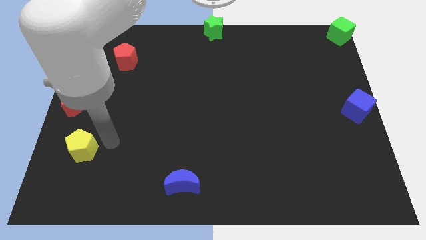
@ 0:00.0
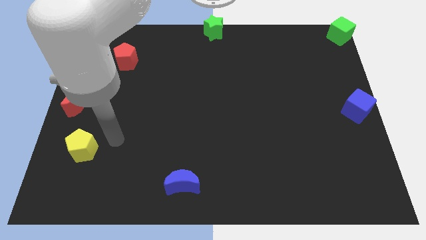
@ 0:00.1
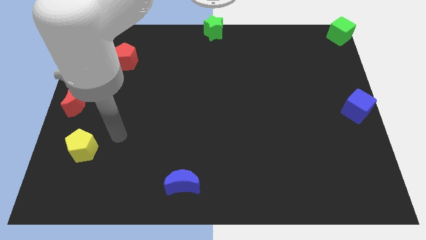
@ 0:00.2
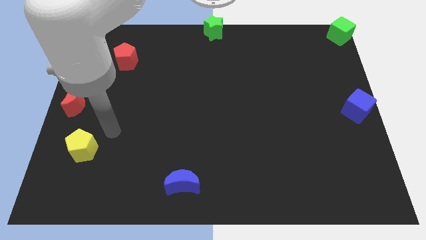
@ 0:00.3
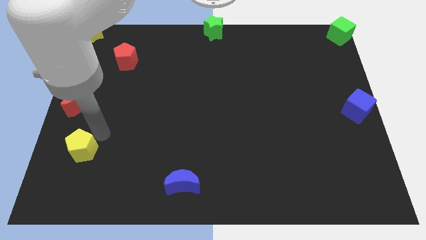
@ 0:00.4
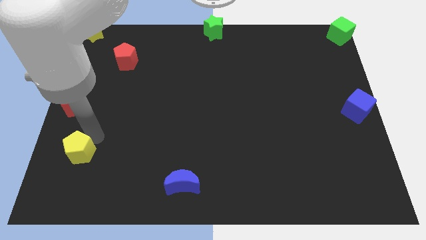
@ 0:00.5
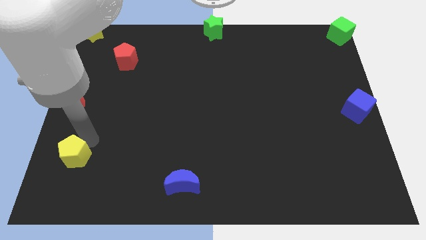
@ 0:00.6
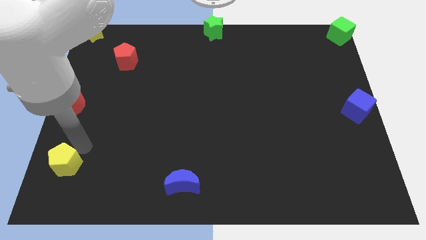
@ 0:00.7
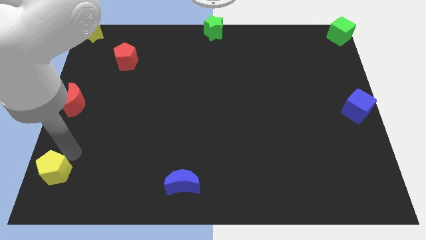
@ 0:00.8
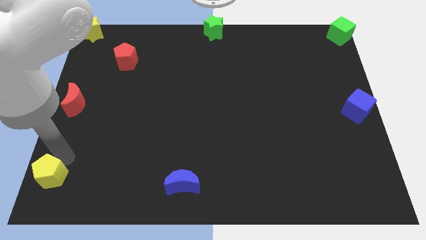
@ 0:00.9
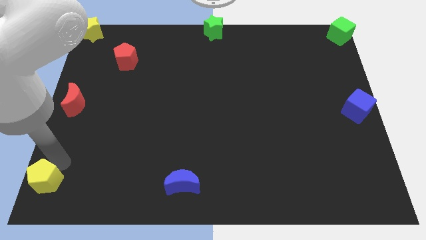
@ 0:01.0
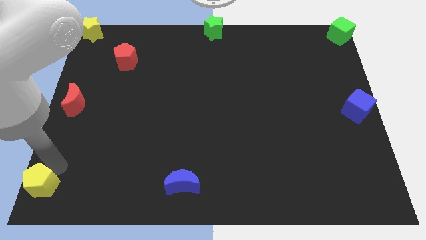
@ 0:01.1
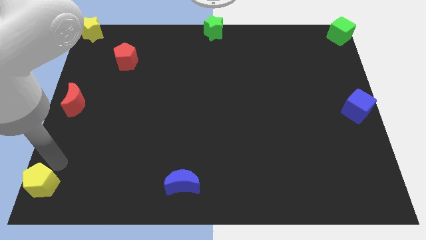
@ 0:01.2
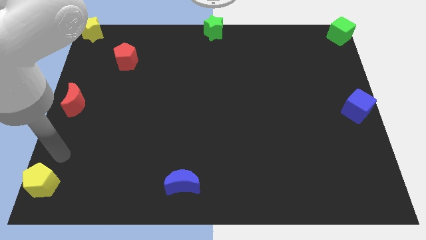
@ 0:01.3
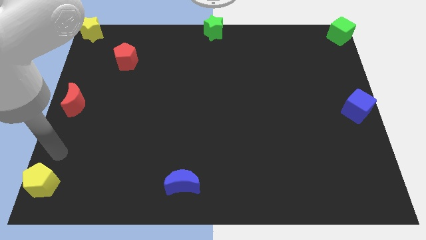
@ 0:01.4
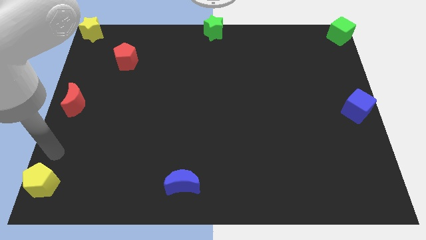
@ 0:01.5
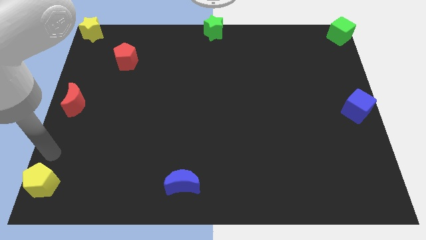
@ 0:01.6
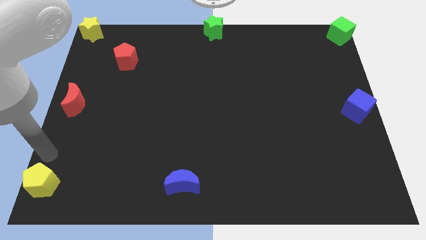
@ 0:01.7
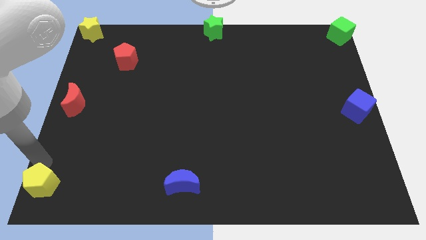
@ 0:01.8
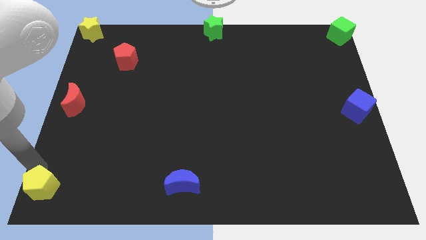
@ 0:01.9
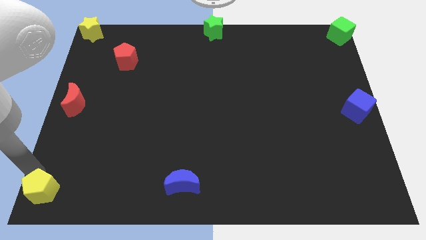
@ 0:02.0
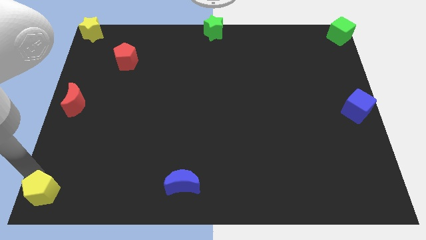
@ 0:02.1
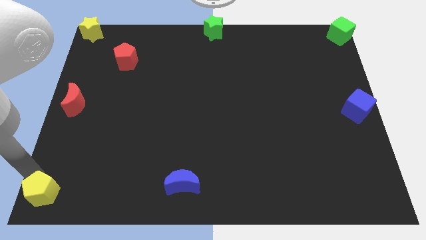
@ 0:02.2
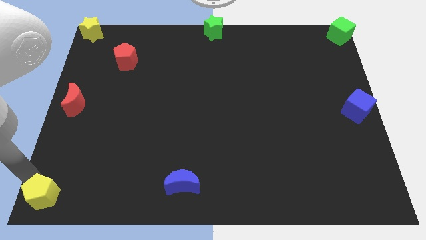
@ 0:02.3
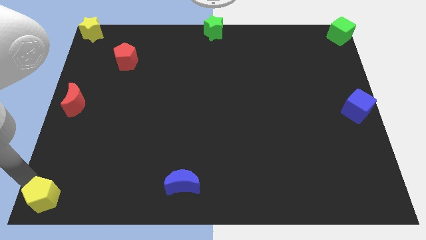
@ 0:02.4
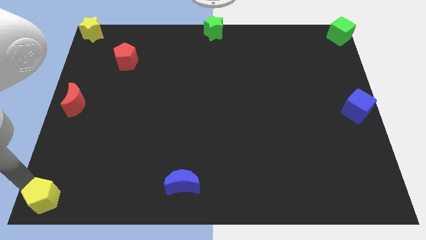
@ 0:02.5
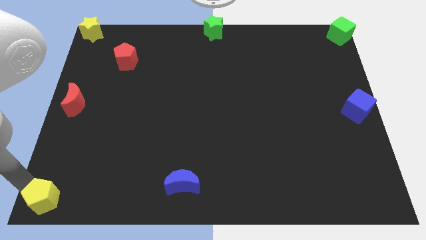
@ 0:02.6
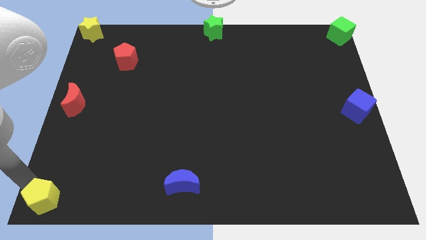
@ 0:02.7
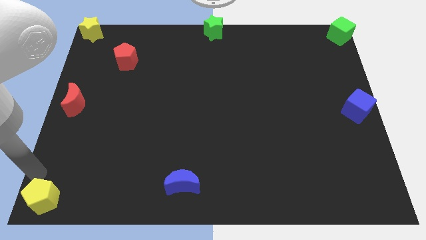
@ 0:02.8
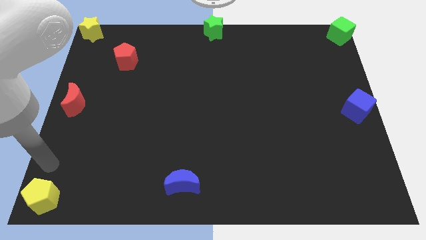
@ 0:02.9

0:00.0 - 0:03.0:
place yellow pentagon towards bottom left corner

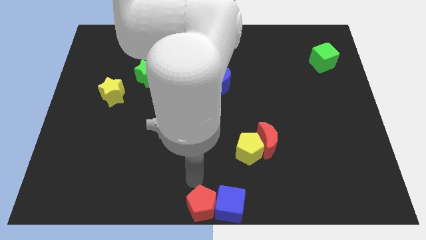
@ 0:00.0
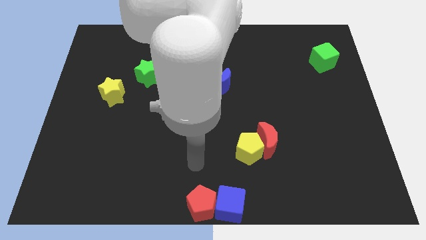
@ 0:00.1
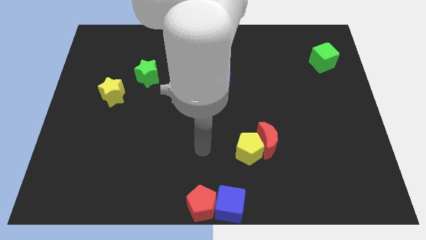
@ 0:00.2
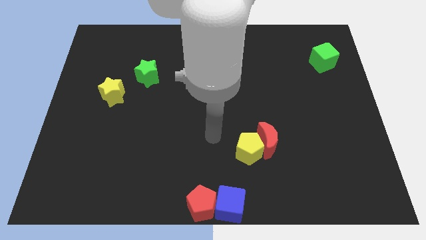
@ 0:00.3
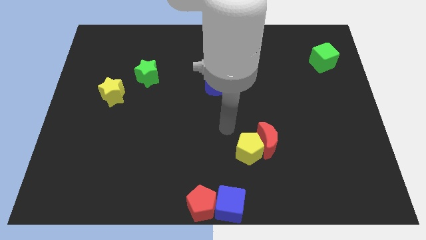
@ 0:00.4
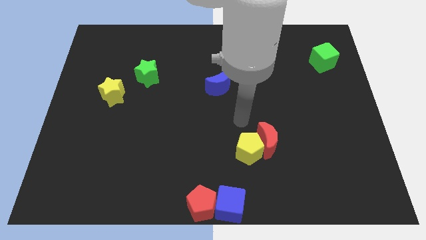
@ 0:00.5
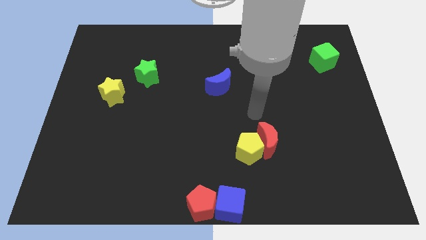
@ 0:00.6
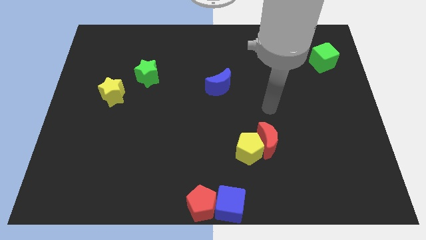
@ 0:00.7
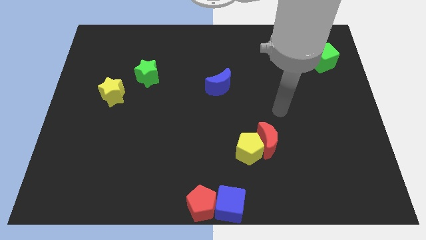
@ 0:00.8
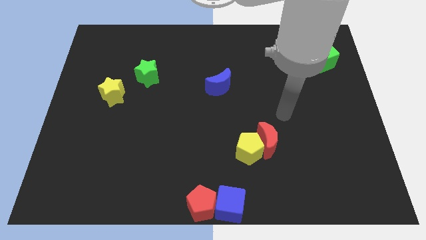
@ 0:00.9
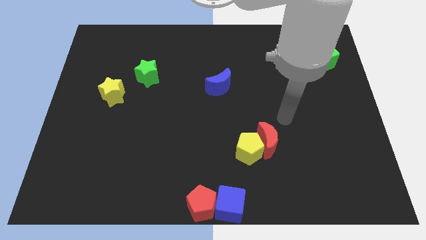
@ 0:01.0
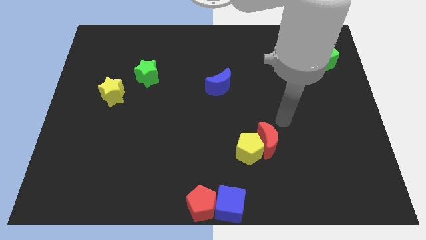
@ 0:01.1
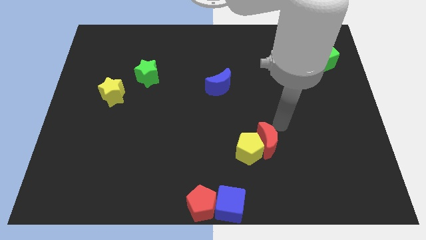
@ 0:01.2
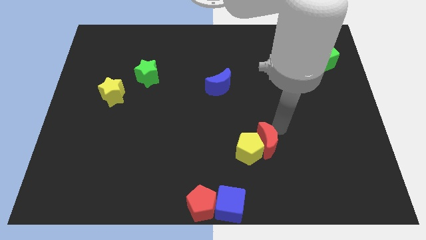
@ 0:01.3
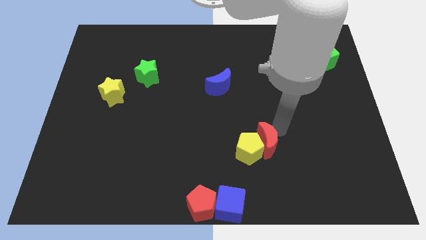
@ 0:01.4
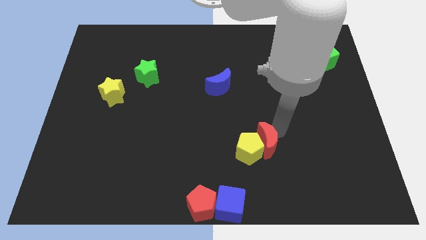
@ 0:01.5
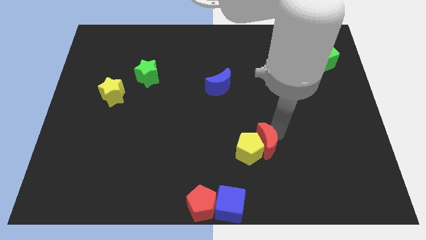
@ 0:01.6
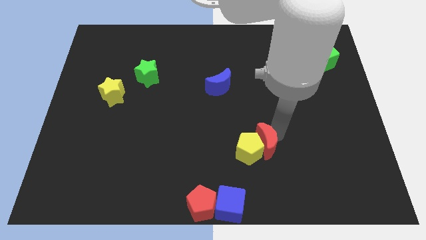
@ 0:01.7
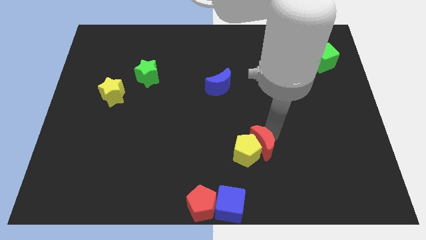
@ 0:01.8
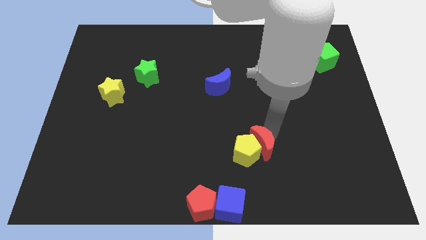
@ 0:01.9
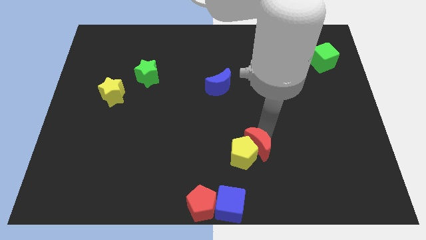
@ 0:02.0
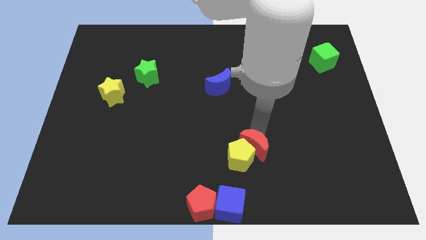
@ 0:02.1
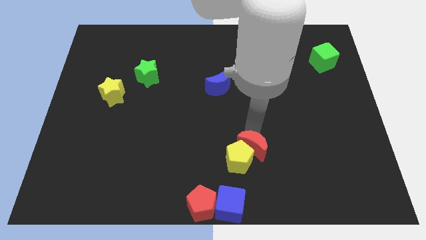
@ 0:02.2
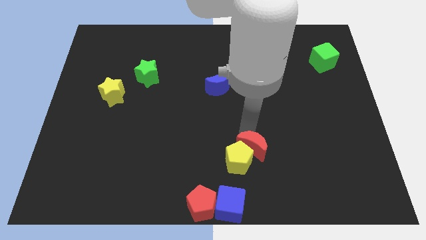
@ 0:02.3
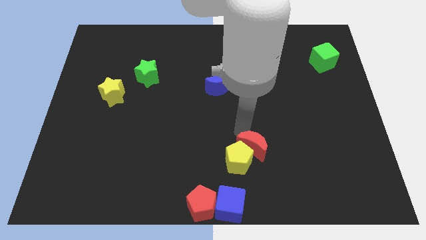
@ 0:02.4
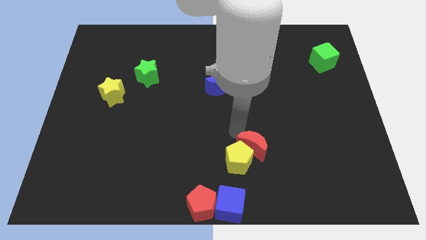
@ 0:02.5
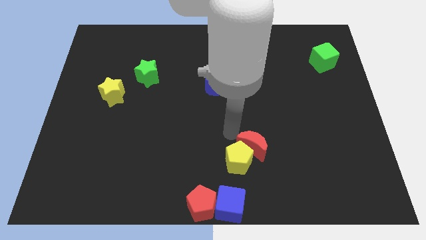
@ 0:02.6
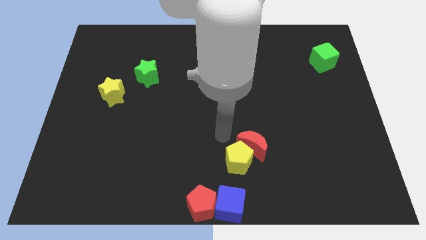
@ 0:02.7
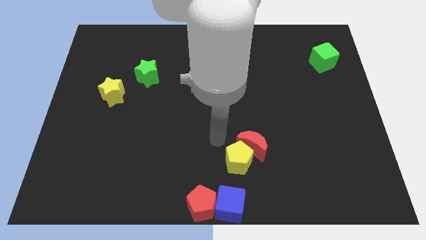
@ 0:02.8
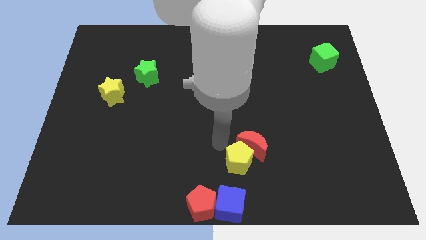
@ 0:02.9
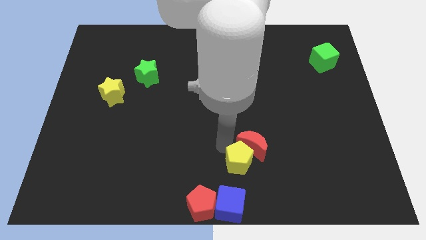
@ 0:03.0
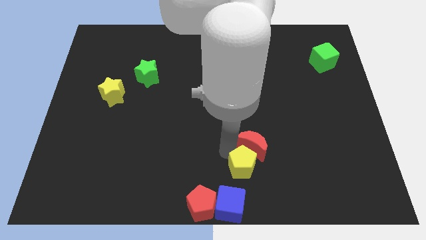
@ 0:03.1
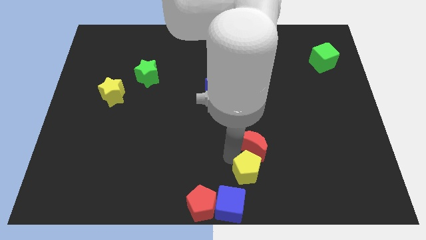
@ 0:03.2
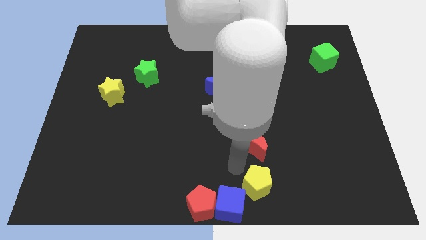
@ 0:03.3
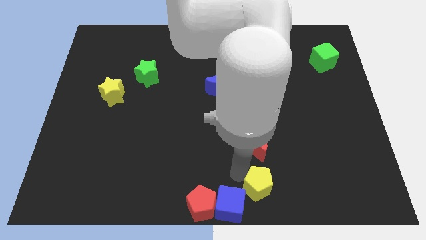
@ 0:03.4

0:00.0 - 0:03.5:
separate yellow pentagon from the red crescent

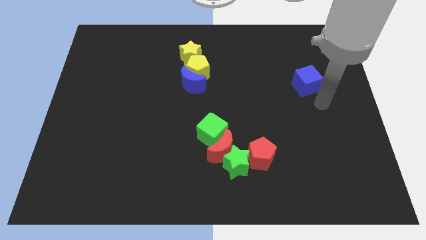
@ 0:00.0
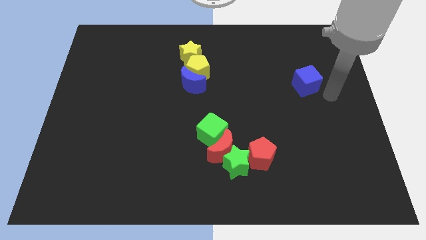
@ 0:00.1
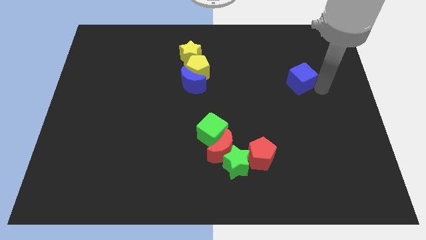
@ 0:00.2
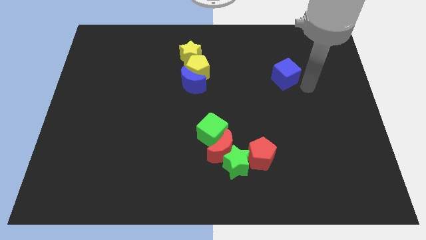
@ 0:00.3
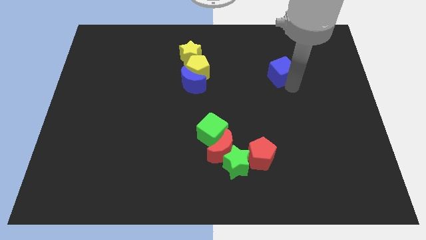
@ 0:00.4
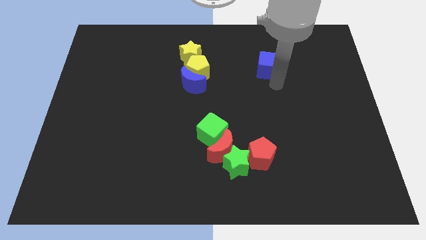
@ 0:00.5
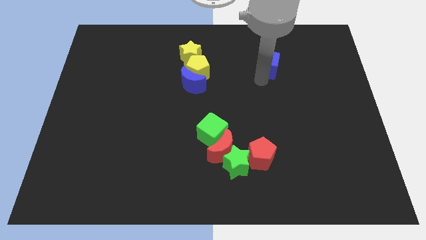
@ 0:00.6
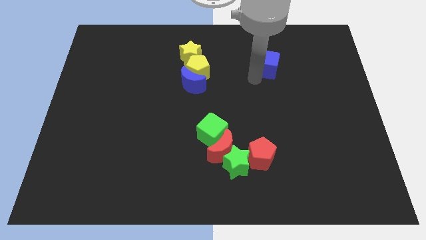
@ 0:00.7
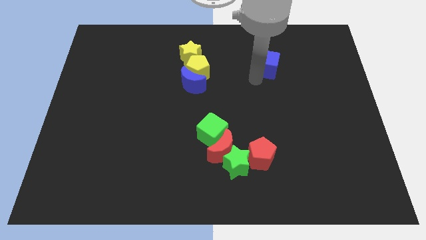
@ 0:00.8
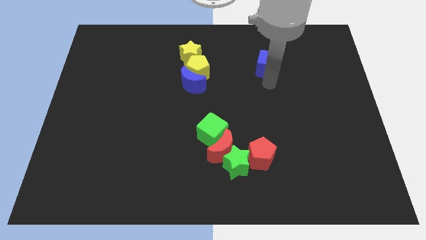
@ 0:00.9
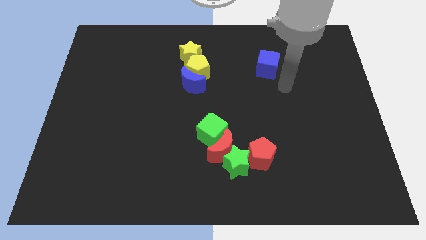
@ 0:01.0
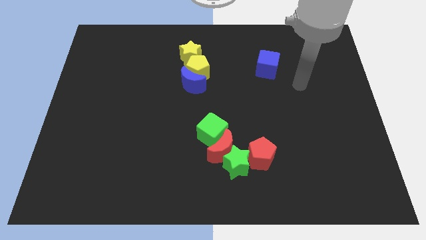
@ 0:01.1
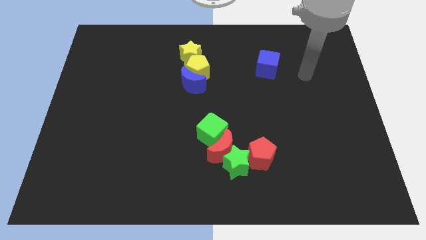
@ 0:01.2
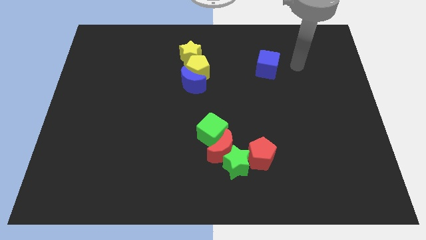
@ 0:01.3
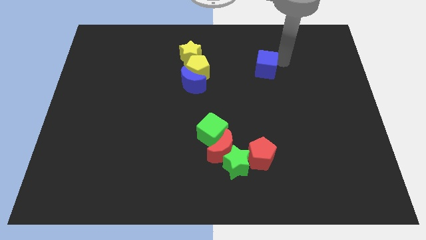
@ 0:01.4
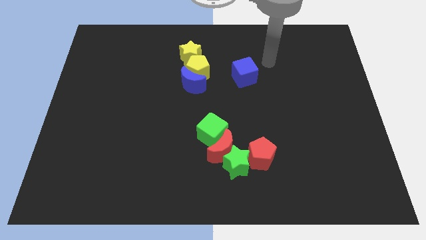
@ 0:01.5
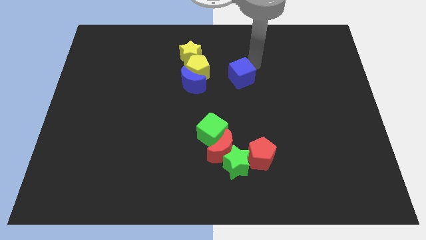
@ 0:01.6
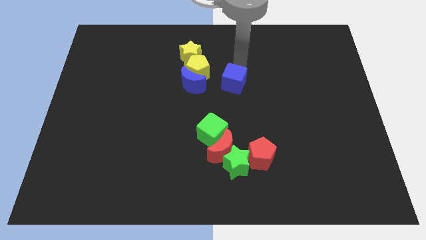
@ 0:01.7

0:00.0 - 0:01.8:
move blue cube parallel to the blue crescent

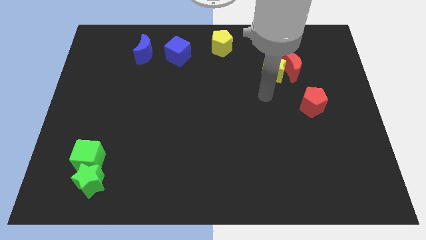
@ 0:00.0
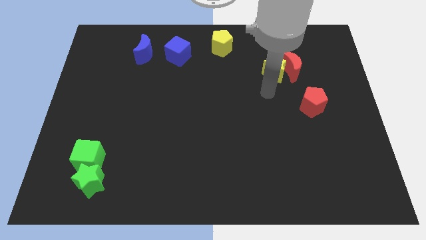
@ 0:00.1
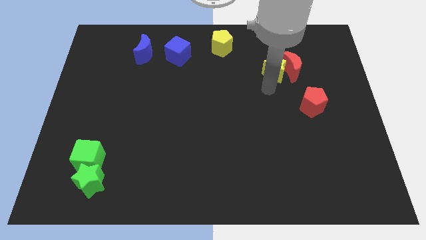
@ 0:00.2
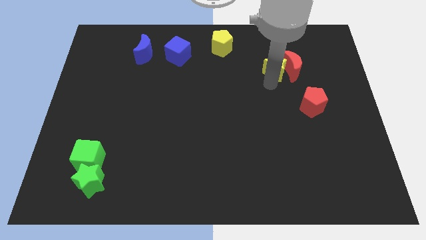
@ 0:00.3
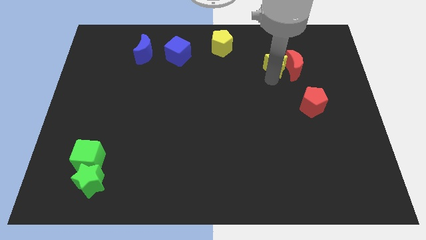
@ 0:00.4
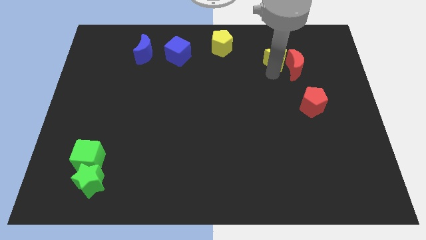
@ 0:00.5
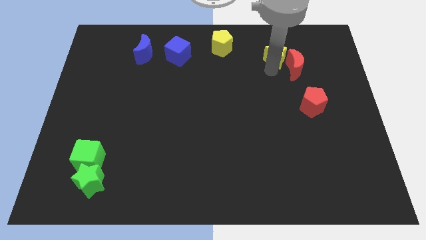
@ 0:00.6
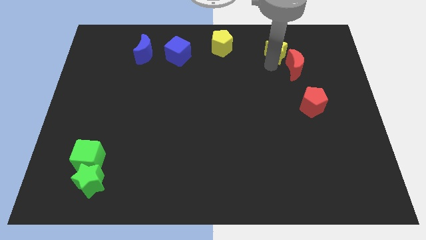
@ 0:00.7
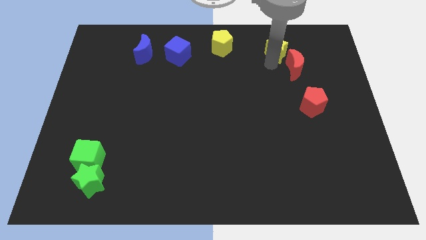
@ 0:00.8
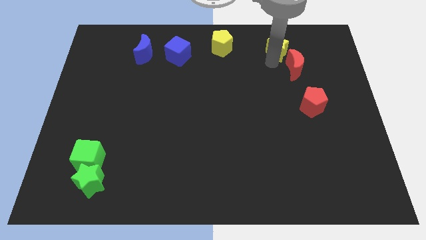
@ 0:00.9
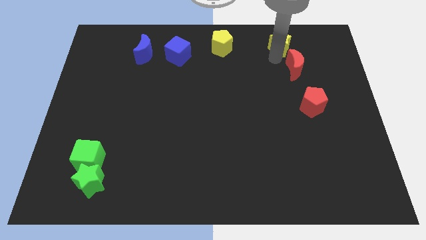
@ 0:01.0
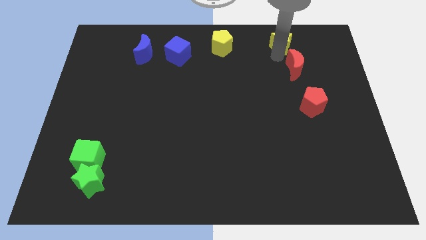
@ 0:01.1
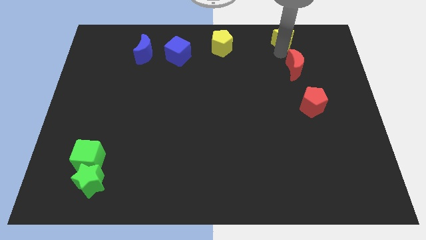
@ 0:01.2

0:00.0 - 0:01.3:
separate yellow pentagon from red crescent
